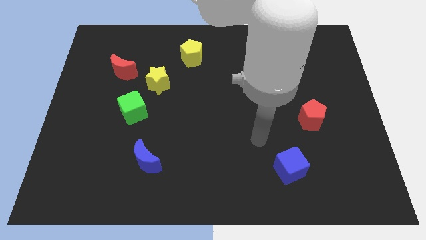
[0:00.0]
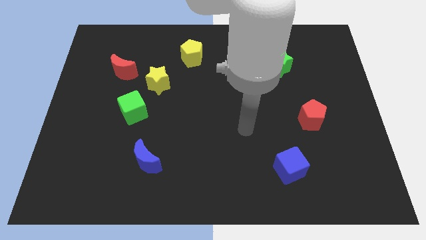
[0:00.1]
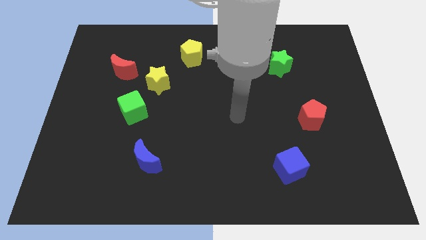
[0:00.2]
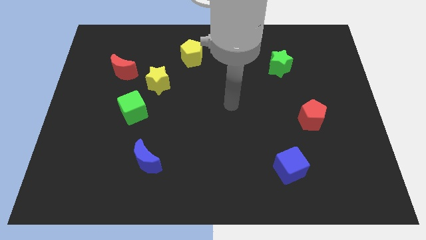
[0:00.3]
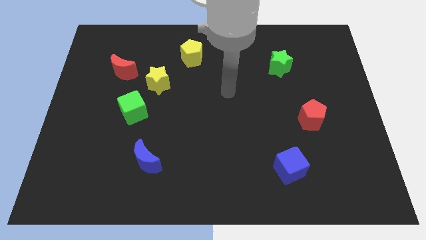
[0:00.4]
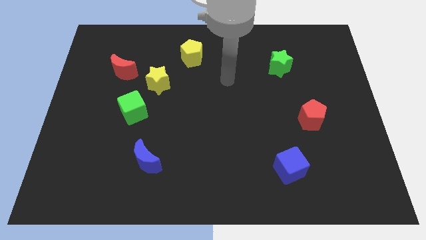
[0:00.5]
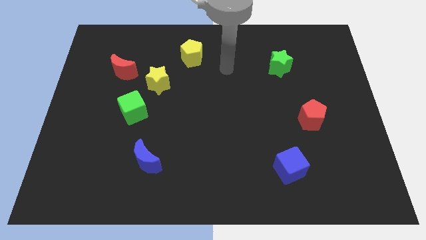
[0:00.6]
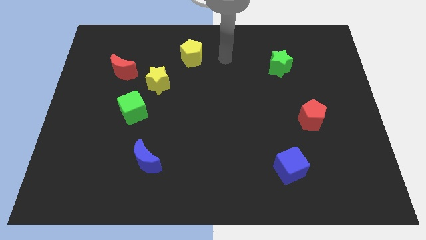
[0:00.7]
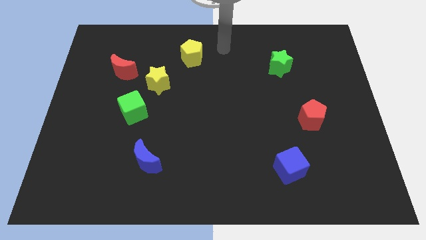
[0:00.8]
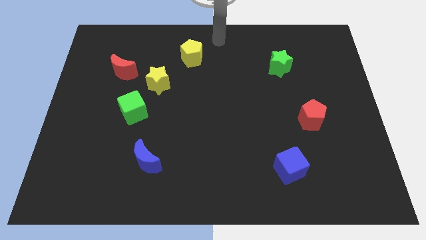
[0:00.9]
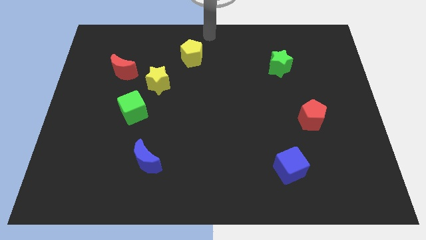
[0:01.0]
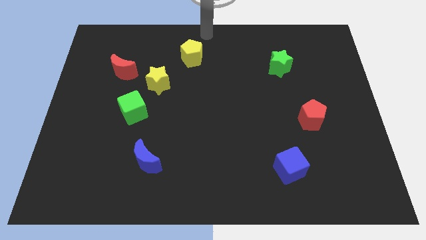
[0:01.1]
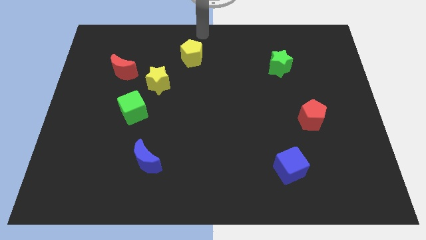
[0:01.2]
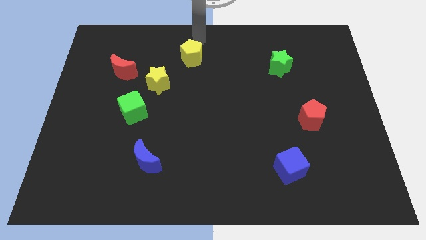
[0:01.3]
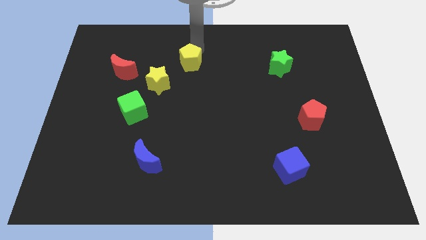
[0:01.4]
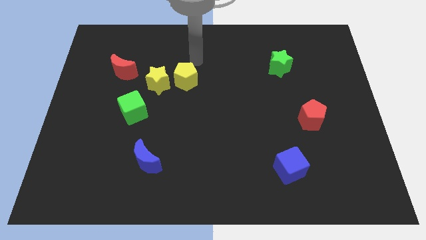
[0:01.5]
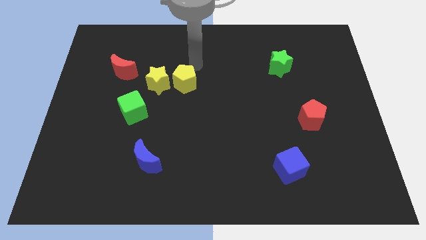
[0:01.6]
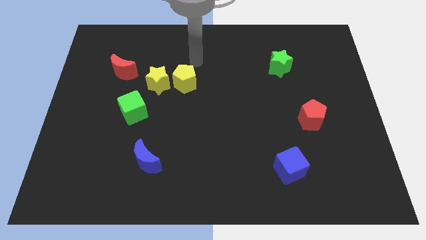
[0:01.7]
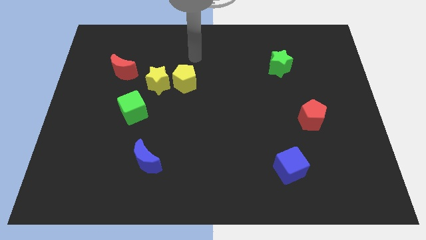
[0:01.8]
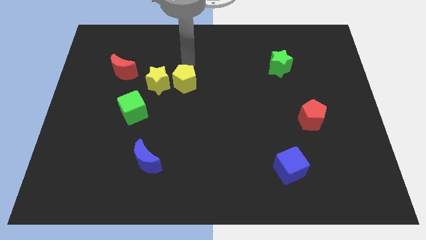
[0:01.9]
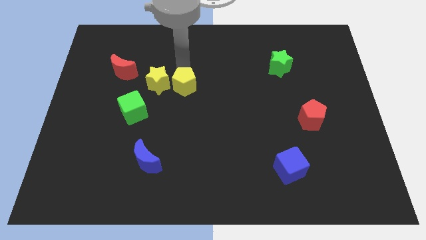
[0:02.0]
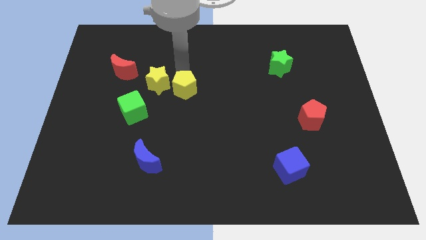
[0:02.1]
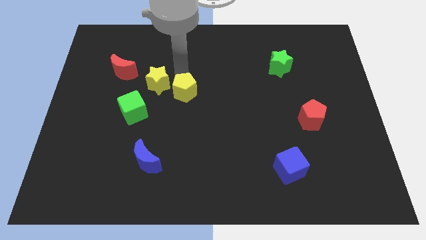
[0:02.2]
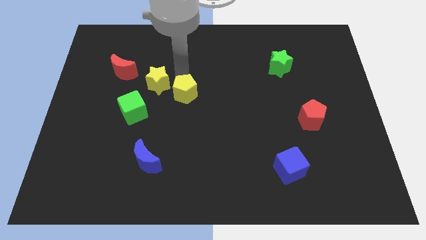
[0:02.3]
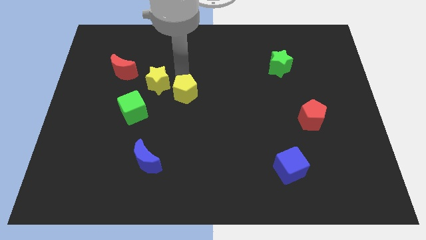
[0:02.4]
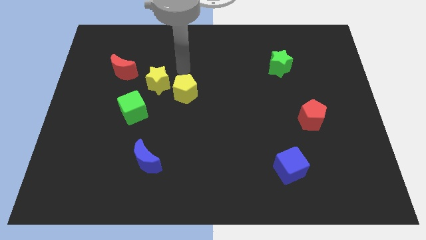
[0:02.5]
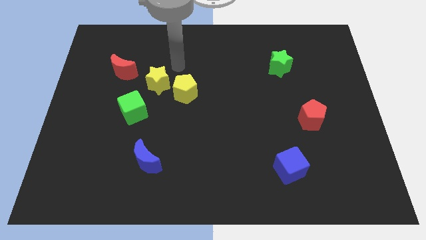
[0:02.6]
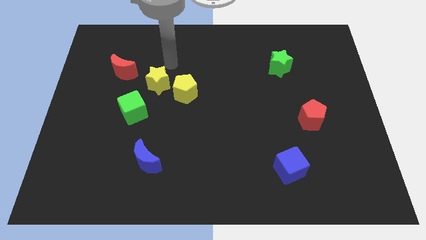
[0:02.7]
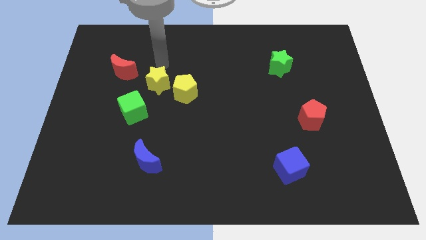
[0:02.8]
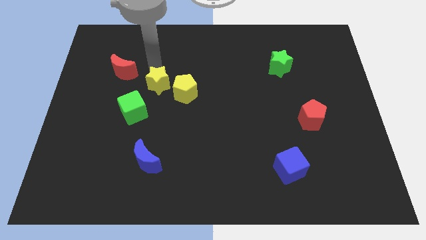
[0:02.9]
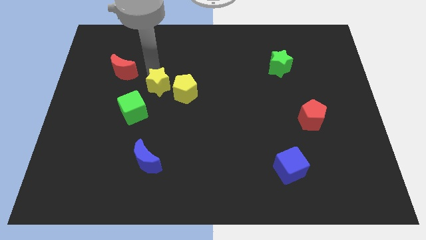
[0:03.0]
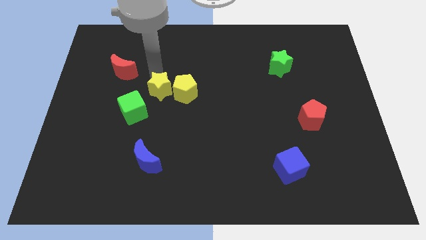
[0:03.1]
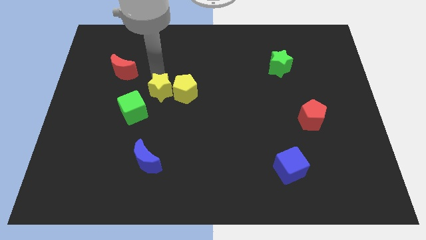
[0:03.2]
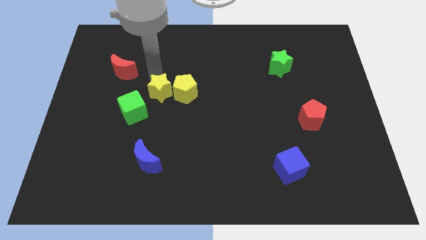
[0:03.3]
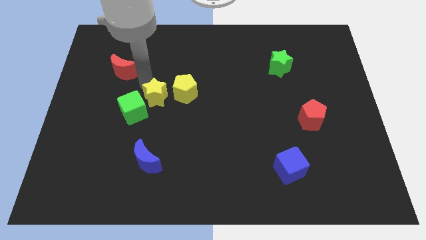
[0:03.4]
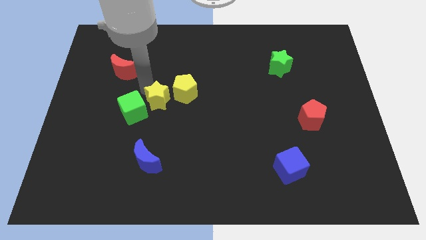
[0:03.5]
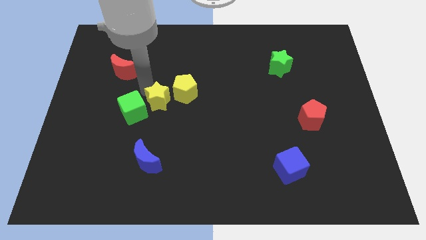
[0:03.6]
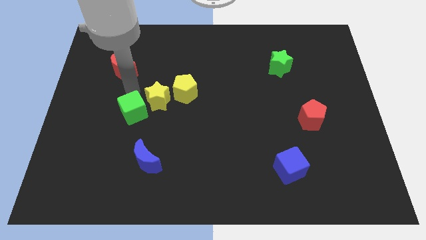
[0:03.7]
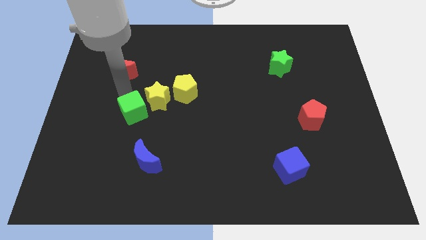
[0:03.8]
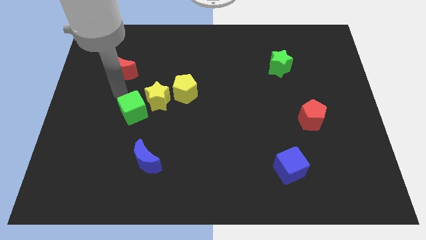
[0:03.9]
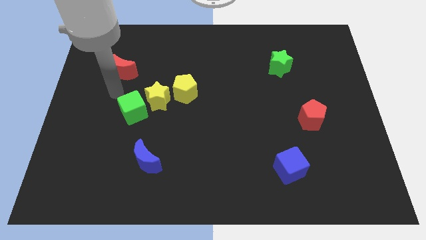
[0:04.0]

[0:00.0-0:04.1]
push the yellow blocks to the right of the green cube

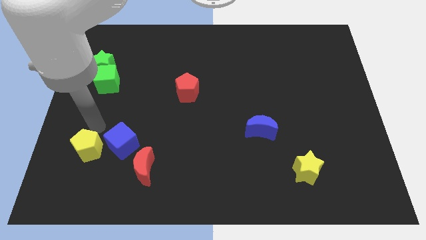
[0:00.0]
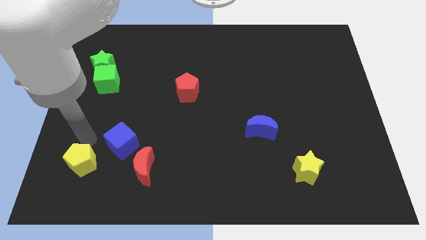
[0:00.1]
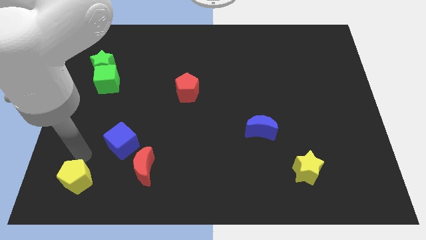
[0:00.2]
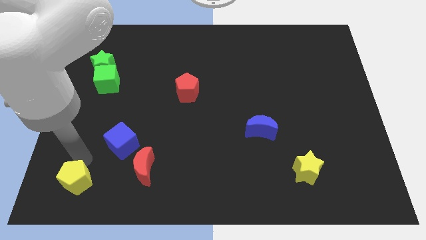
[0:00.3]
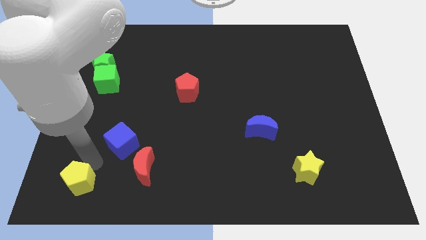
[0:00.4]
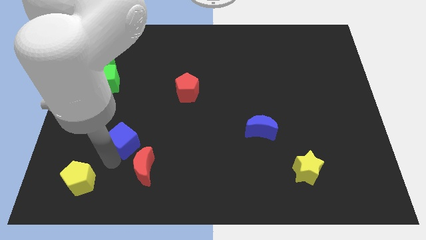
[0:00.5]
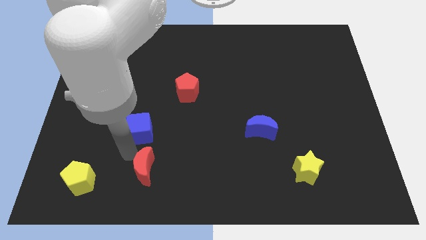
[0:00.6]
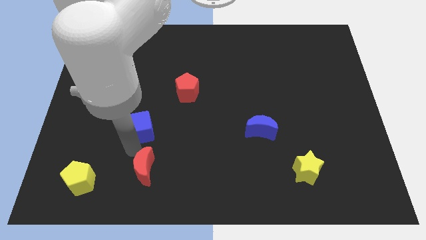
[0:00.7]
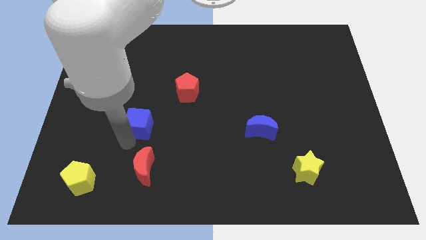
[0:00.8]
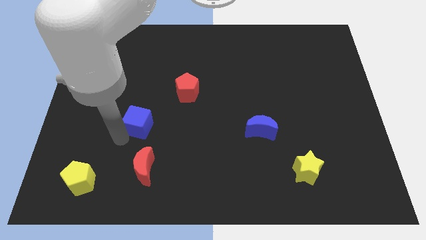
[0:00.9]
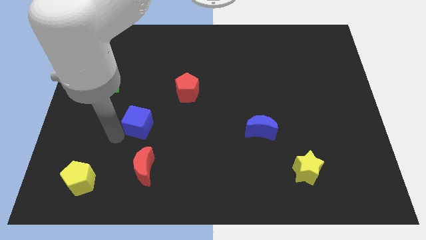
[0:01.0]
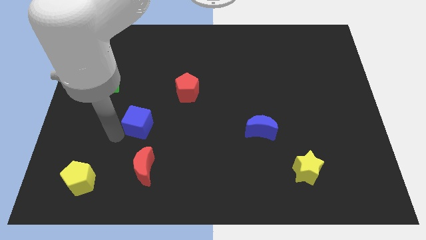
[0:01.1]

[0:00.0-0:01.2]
slightly move the yellow pentagon bottom left of the board

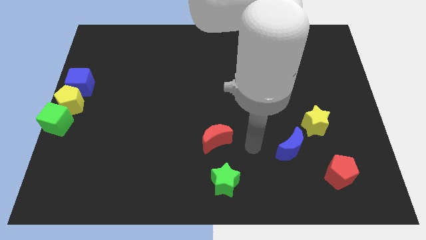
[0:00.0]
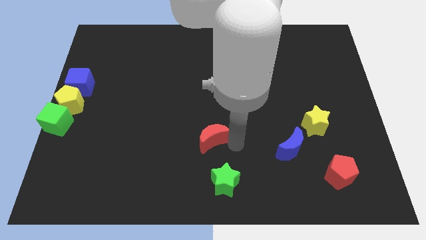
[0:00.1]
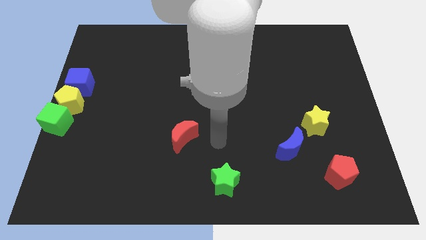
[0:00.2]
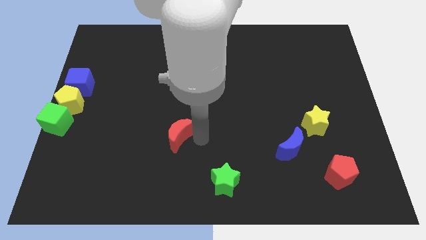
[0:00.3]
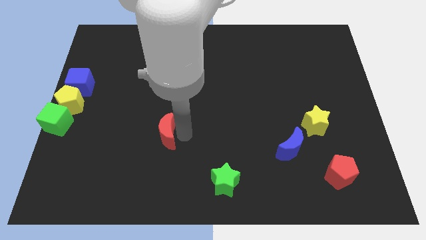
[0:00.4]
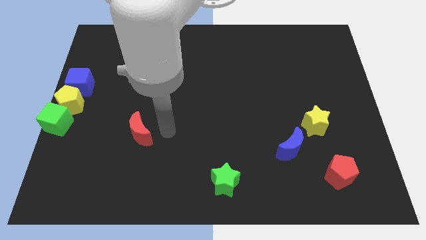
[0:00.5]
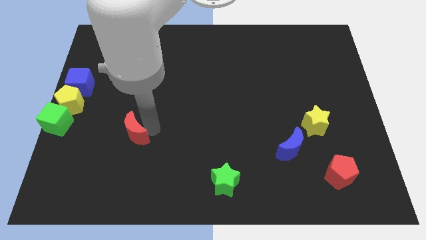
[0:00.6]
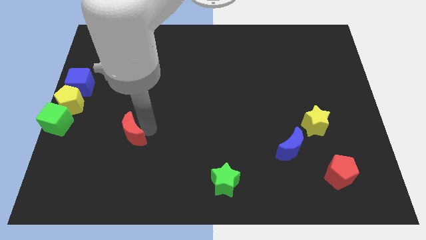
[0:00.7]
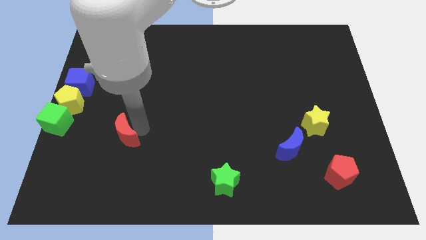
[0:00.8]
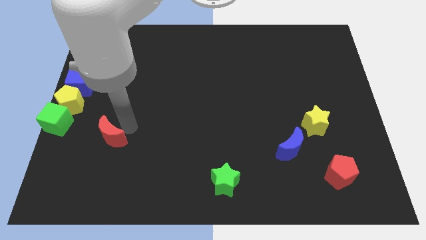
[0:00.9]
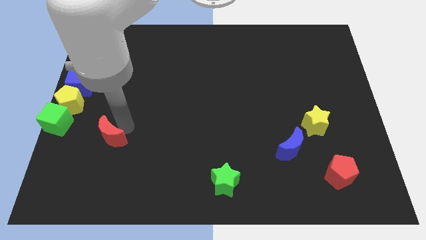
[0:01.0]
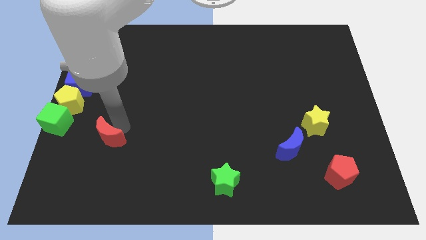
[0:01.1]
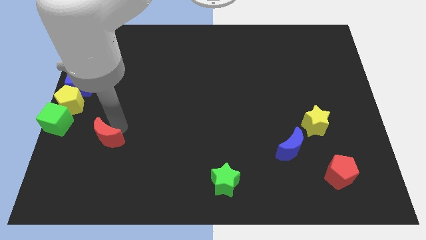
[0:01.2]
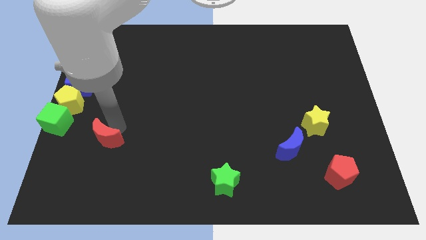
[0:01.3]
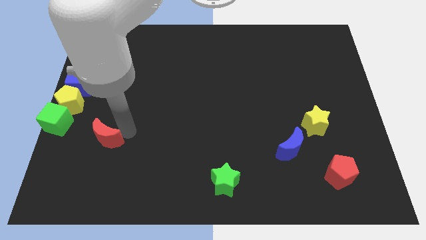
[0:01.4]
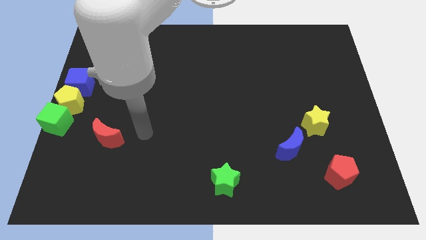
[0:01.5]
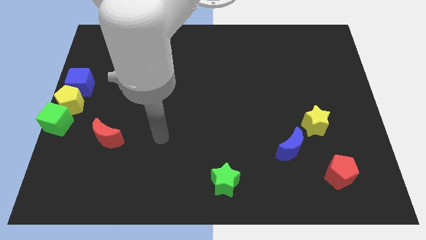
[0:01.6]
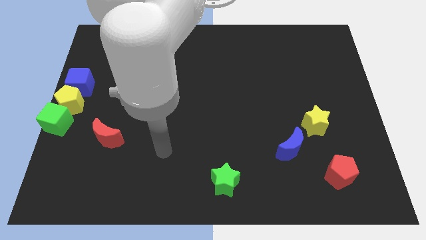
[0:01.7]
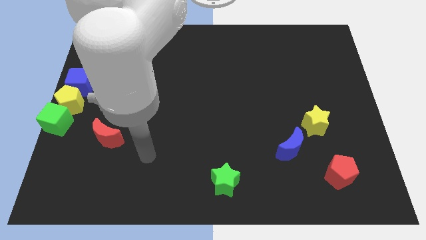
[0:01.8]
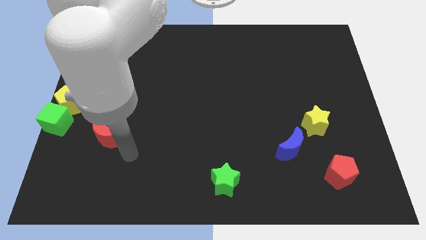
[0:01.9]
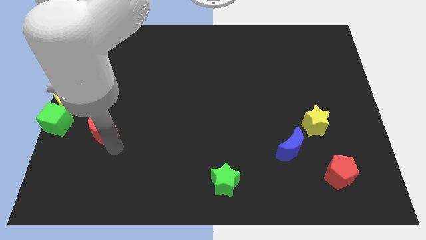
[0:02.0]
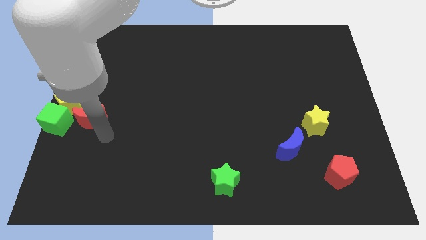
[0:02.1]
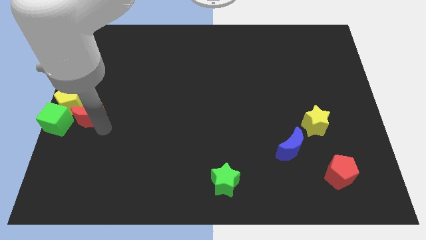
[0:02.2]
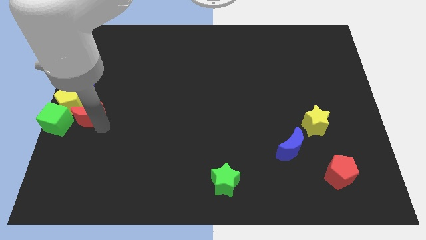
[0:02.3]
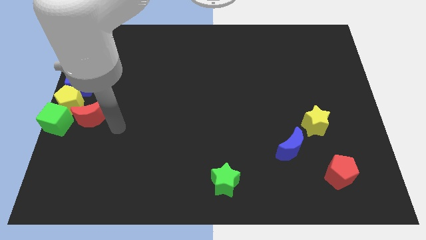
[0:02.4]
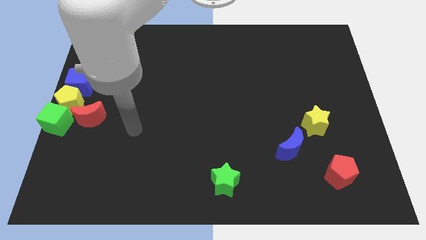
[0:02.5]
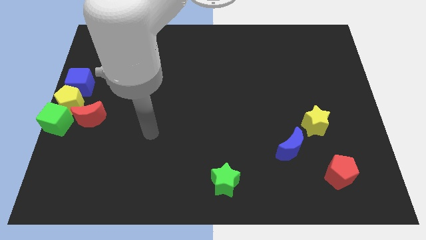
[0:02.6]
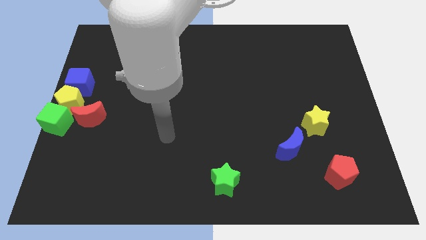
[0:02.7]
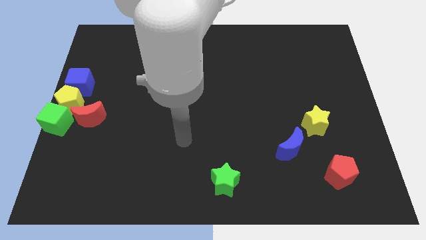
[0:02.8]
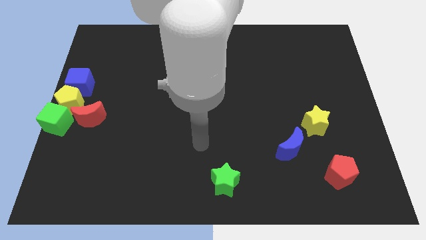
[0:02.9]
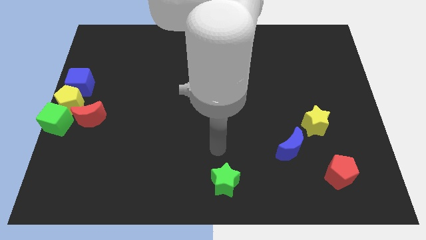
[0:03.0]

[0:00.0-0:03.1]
move red moon near yellow pentagon

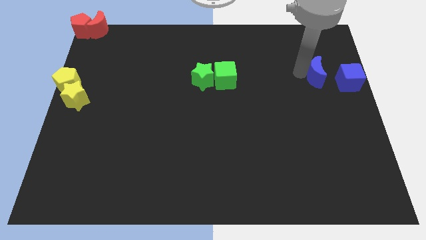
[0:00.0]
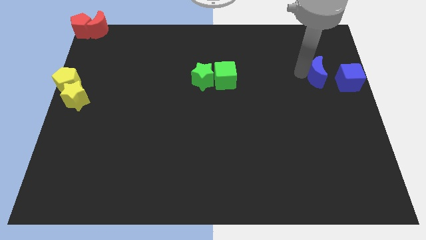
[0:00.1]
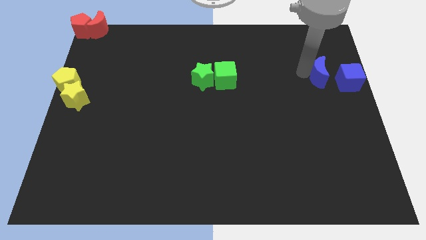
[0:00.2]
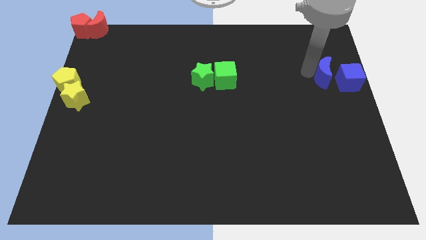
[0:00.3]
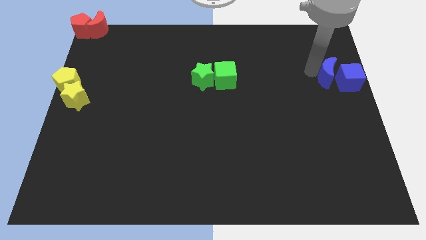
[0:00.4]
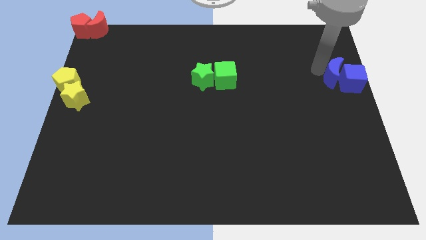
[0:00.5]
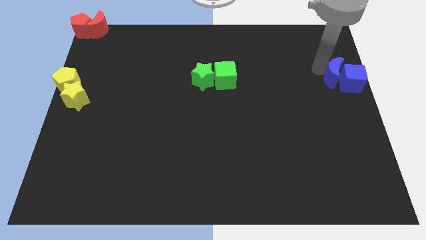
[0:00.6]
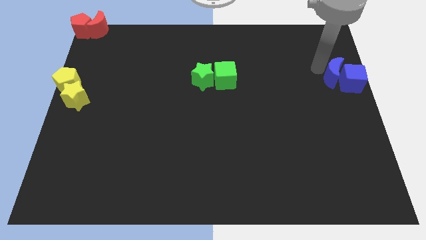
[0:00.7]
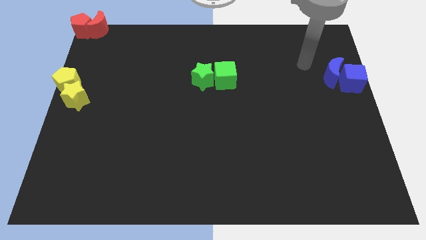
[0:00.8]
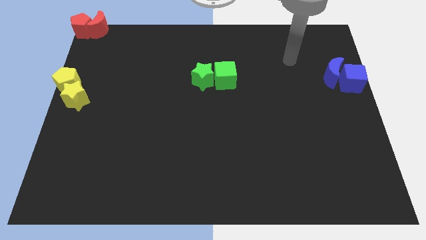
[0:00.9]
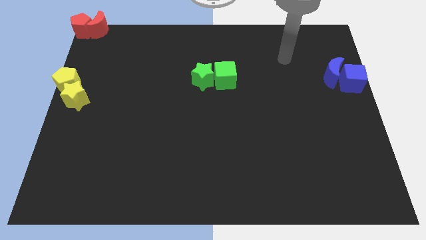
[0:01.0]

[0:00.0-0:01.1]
move the blue crescent into the blue cube at the right center of the board
